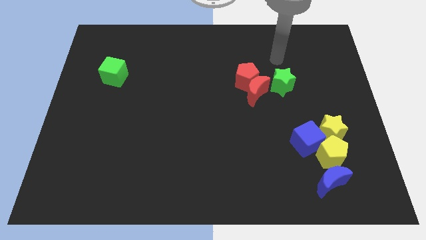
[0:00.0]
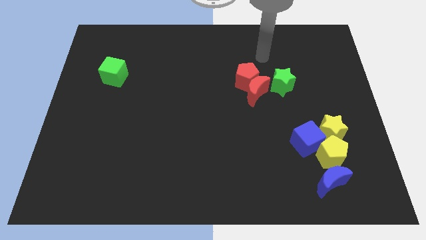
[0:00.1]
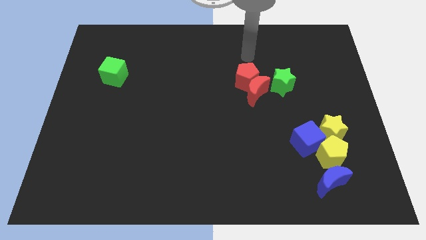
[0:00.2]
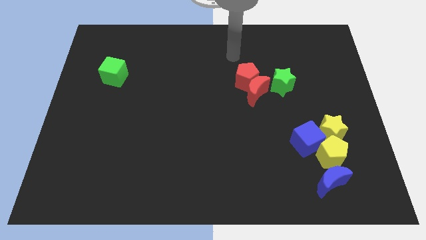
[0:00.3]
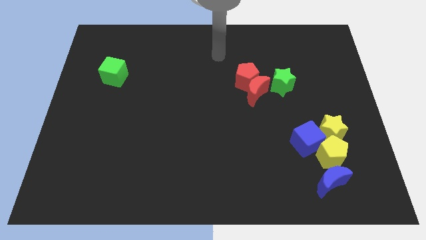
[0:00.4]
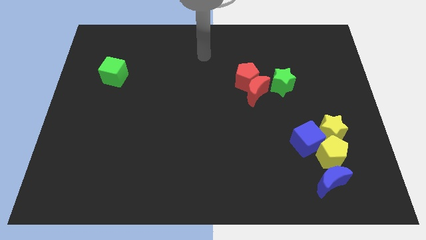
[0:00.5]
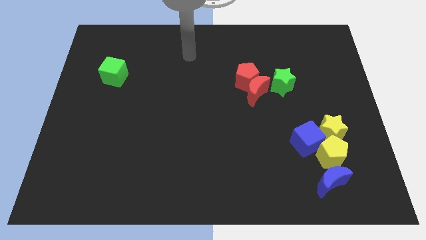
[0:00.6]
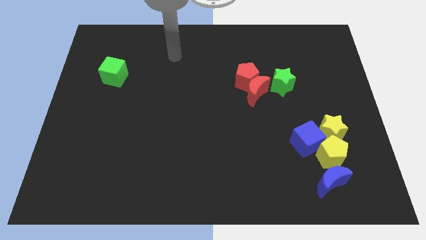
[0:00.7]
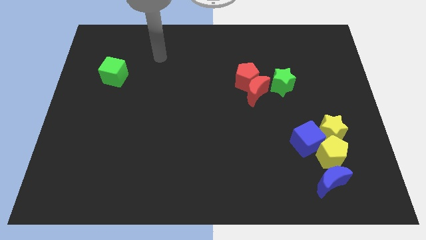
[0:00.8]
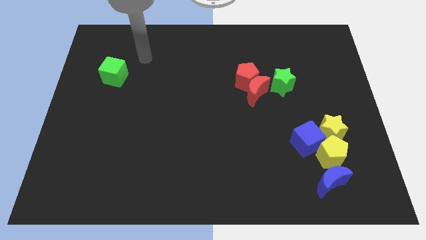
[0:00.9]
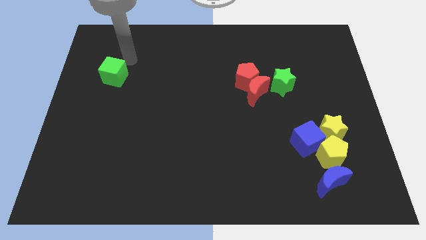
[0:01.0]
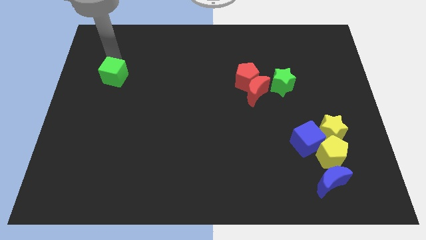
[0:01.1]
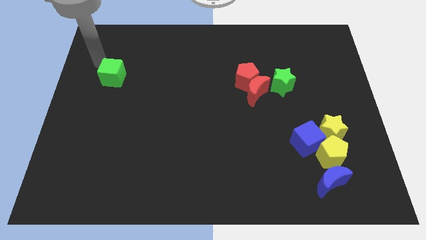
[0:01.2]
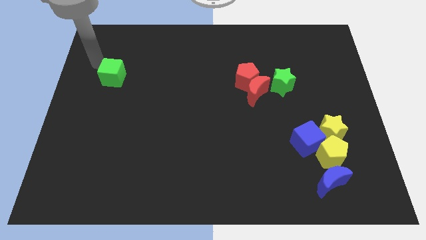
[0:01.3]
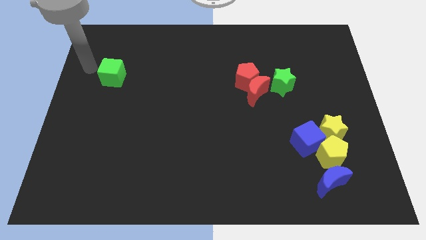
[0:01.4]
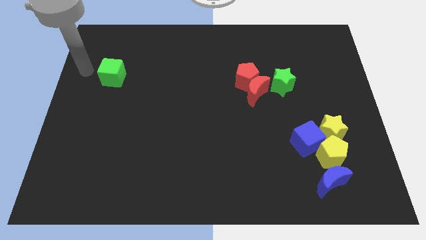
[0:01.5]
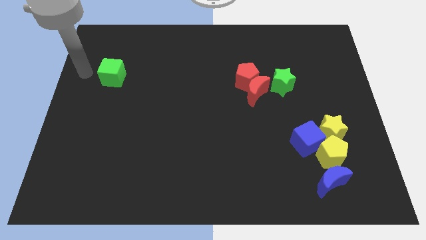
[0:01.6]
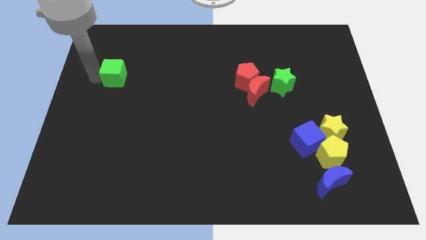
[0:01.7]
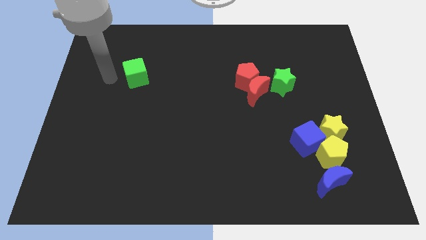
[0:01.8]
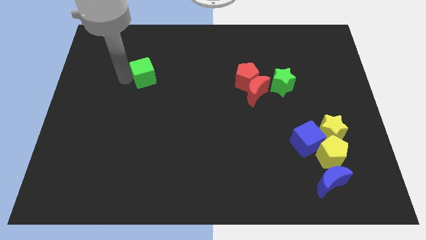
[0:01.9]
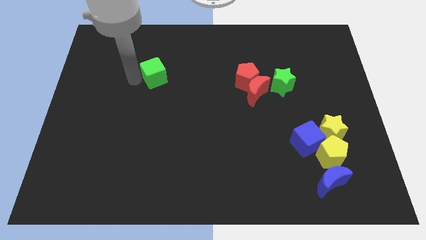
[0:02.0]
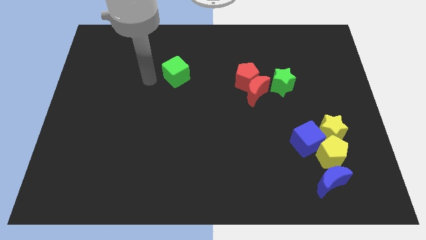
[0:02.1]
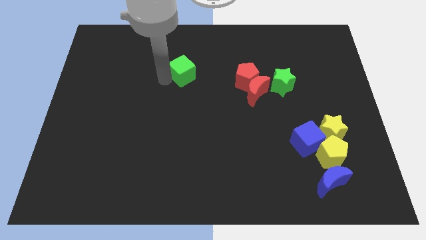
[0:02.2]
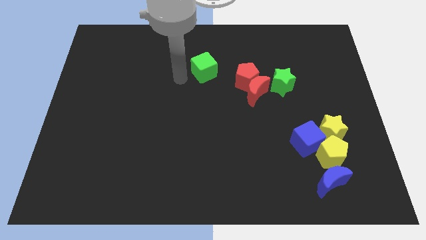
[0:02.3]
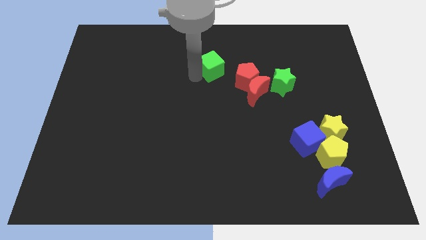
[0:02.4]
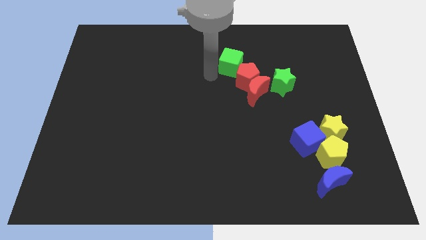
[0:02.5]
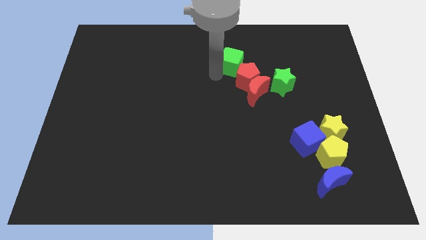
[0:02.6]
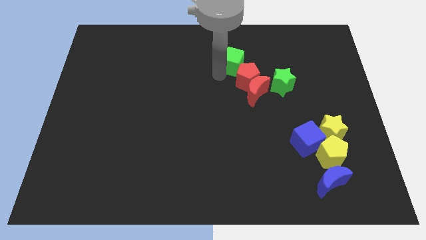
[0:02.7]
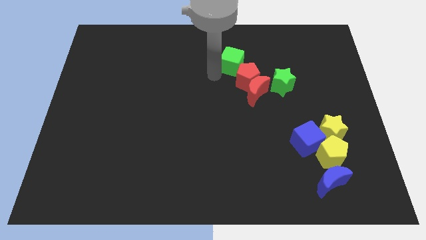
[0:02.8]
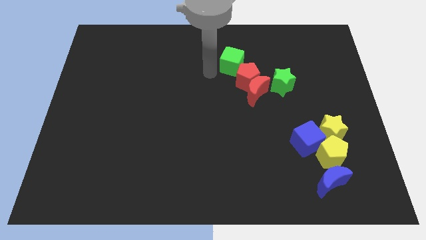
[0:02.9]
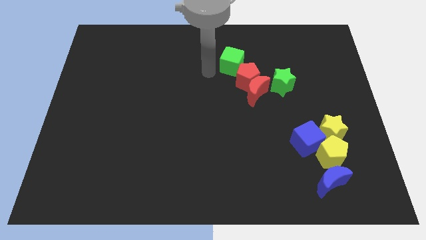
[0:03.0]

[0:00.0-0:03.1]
slide green cube into red pentagon

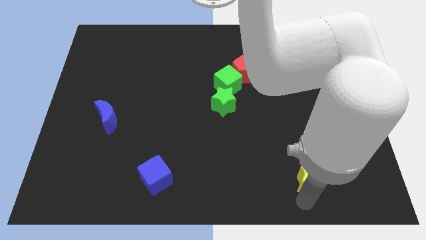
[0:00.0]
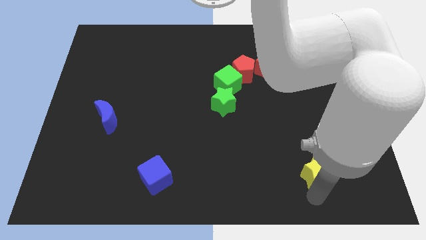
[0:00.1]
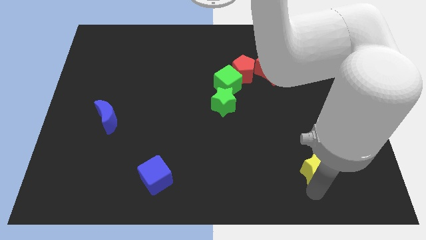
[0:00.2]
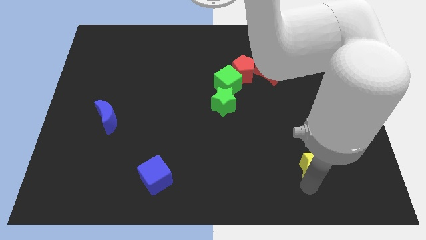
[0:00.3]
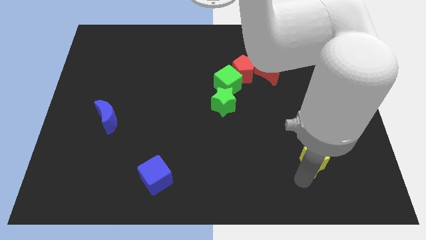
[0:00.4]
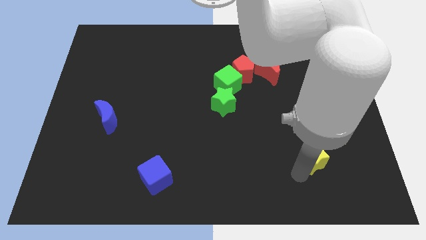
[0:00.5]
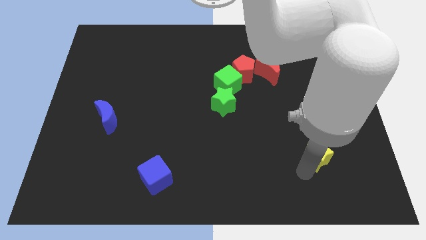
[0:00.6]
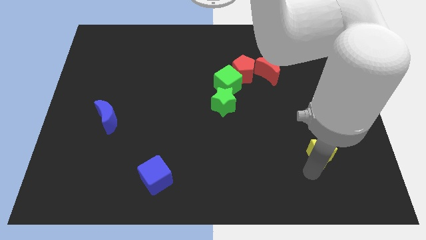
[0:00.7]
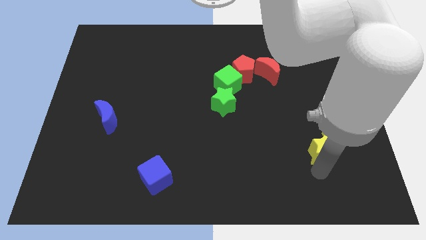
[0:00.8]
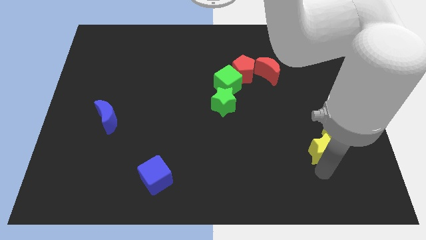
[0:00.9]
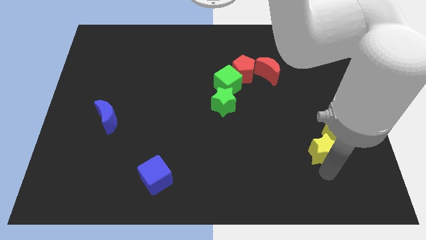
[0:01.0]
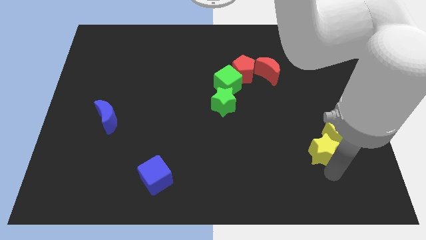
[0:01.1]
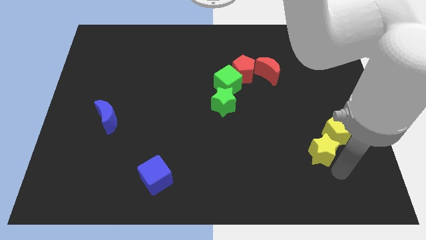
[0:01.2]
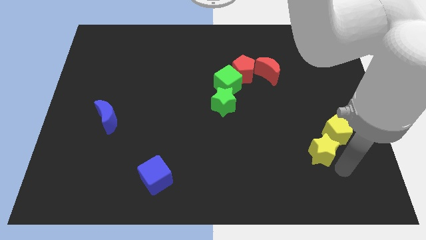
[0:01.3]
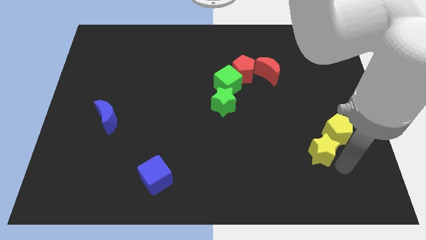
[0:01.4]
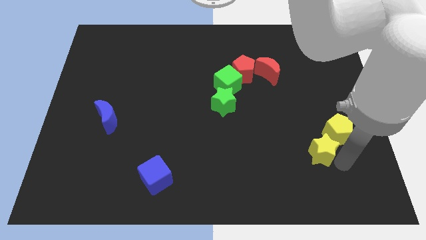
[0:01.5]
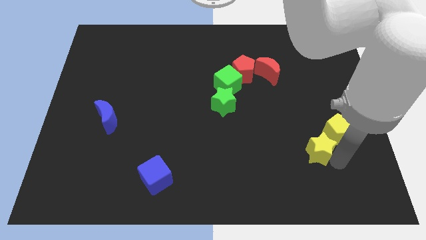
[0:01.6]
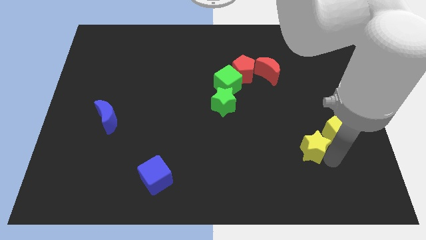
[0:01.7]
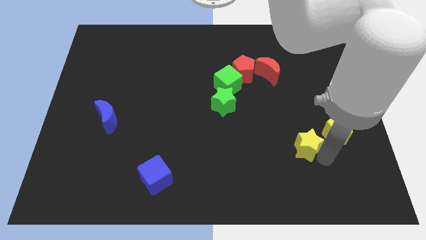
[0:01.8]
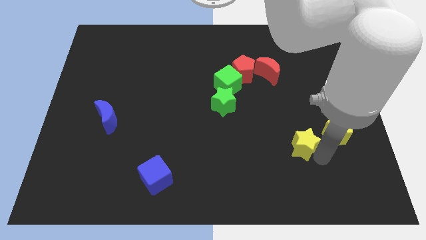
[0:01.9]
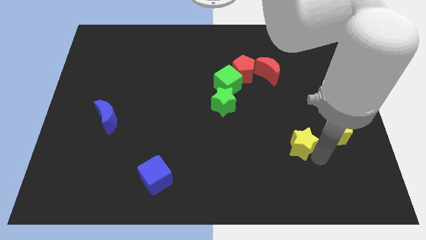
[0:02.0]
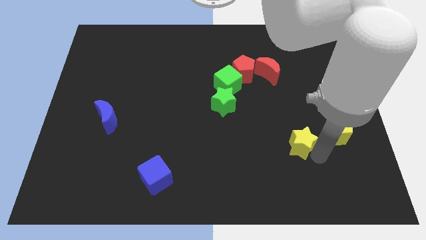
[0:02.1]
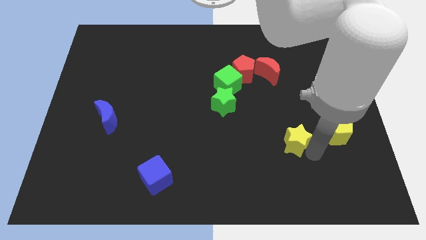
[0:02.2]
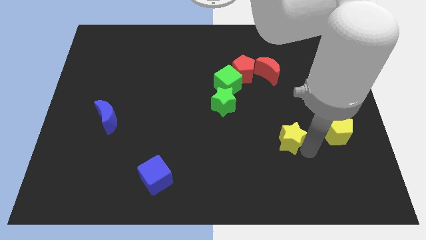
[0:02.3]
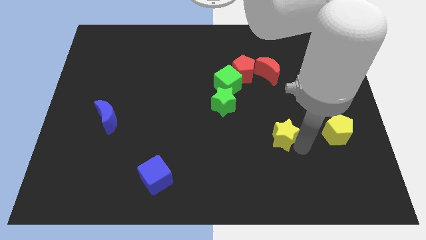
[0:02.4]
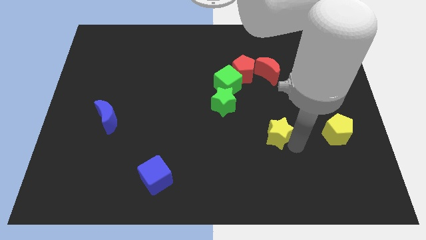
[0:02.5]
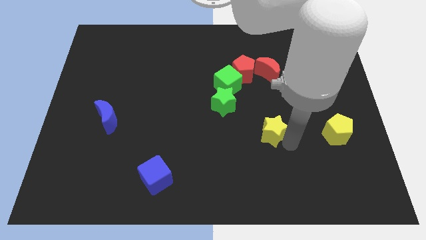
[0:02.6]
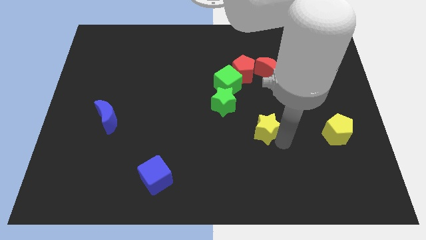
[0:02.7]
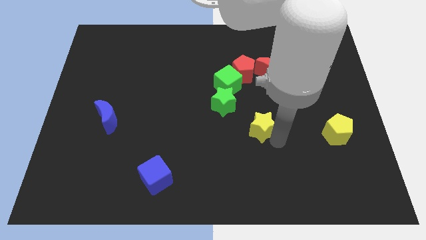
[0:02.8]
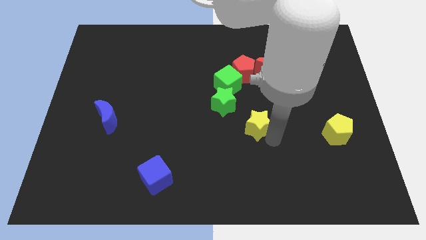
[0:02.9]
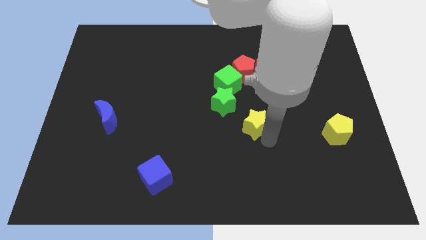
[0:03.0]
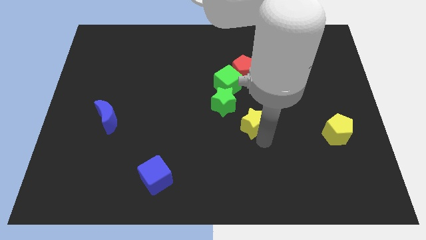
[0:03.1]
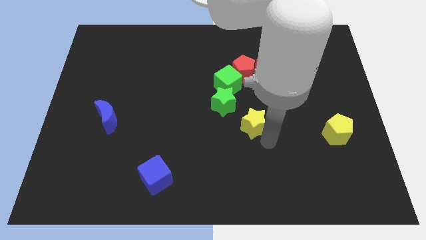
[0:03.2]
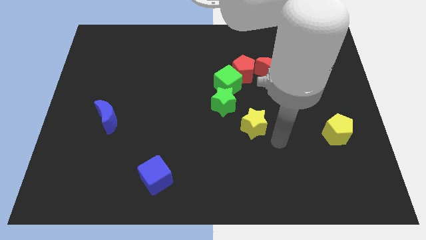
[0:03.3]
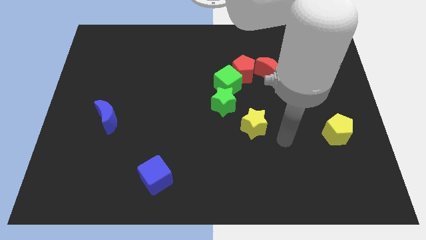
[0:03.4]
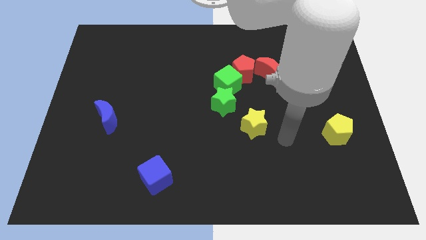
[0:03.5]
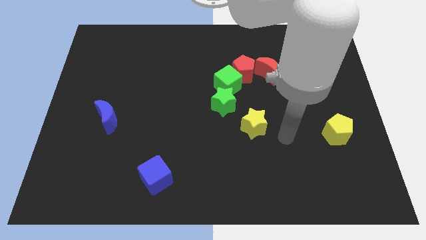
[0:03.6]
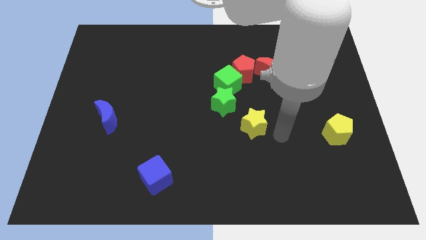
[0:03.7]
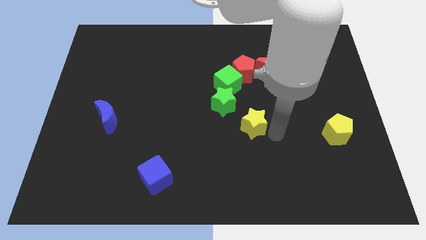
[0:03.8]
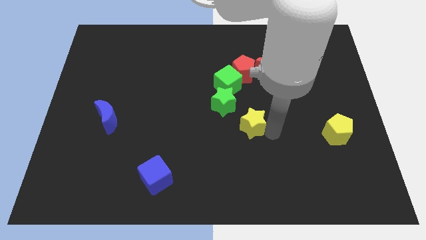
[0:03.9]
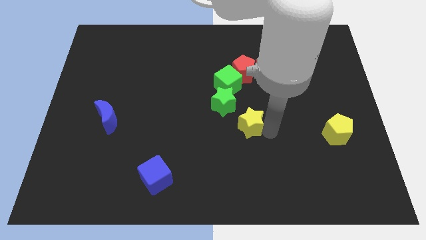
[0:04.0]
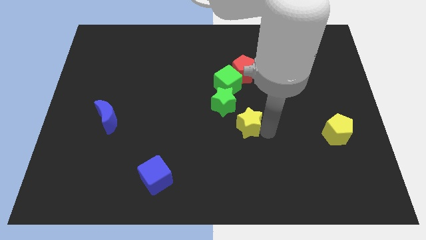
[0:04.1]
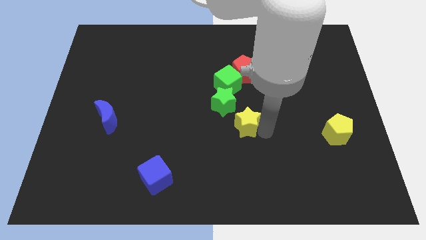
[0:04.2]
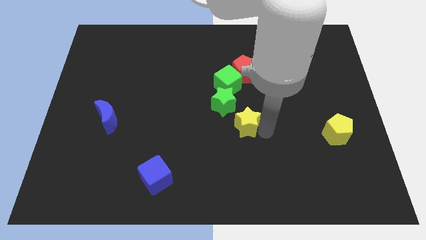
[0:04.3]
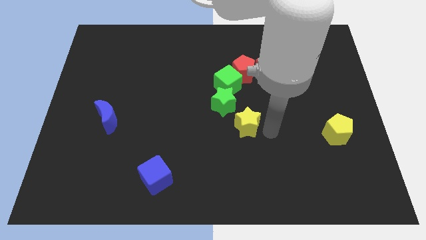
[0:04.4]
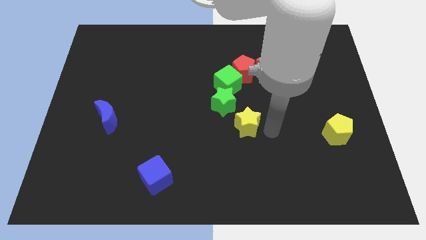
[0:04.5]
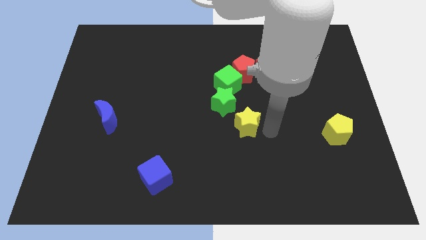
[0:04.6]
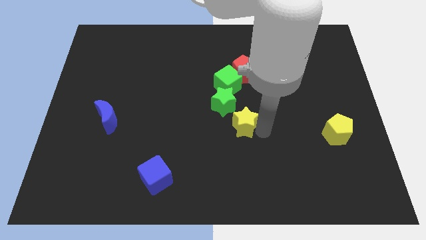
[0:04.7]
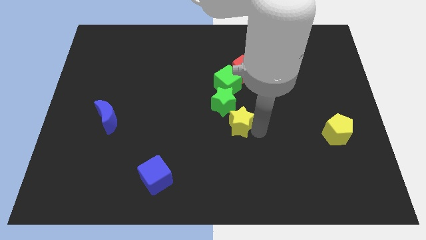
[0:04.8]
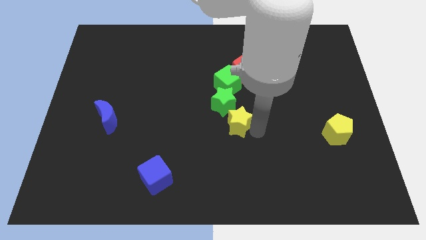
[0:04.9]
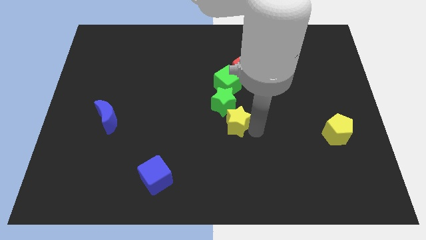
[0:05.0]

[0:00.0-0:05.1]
move the yellow star to the bottom right side of the green star

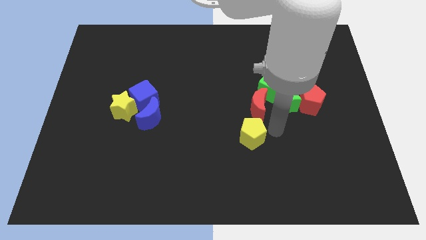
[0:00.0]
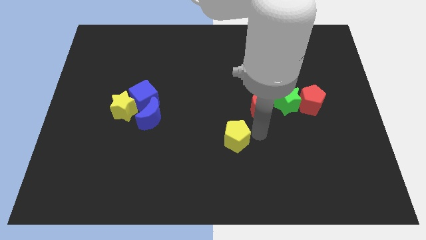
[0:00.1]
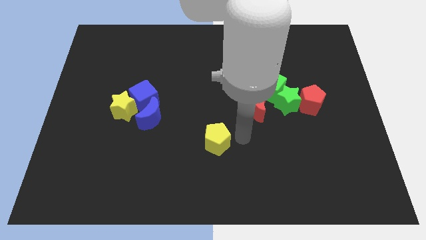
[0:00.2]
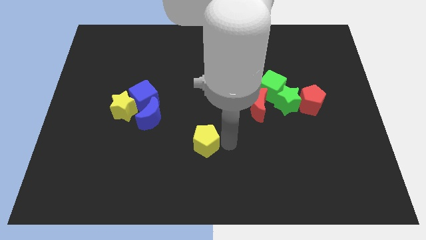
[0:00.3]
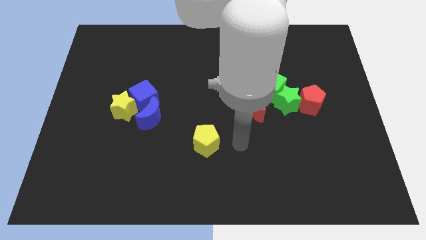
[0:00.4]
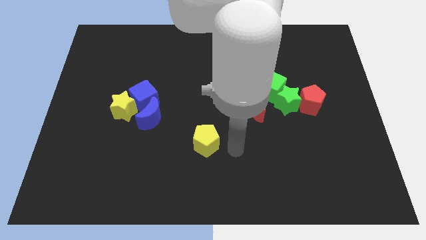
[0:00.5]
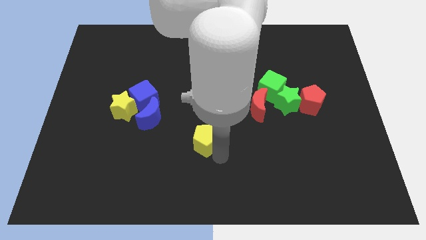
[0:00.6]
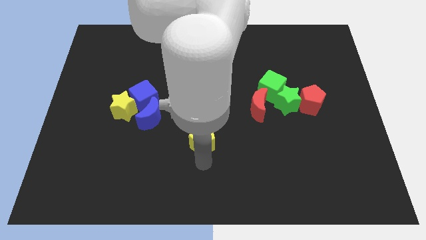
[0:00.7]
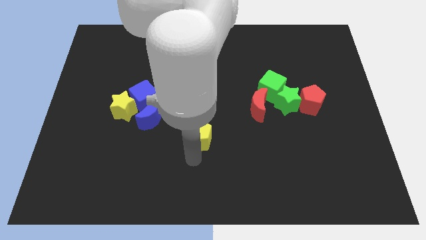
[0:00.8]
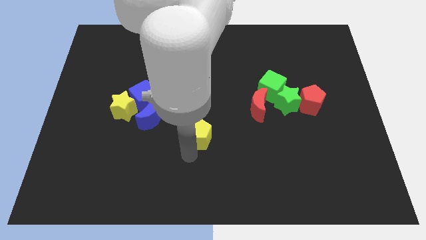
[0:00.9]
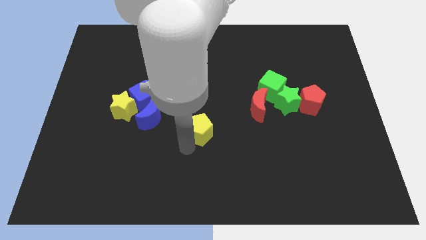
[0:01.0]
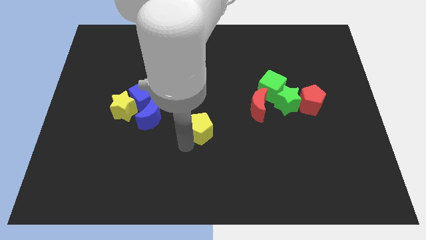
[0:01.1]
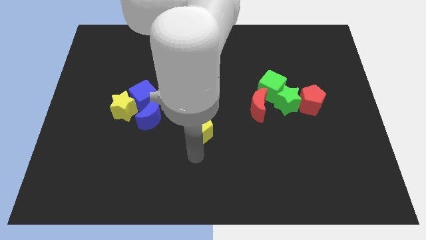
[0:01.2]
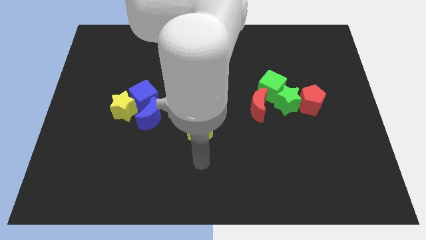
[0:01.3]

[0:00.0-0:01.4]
move the yellow pentagon center of the board
